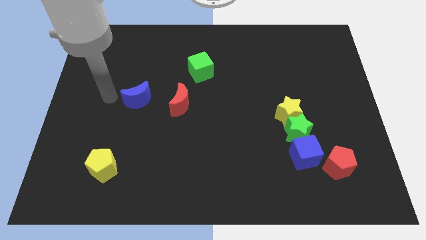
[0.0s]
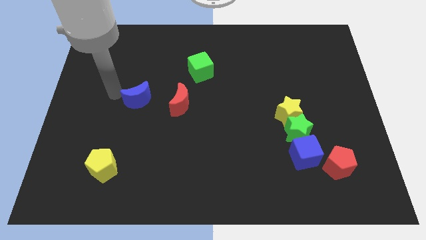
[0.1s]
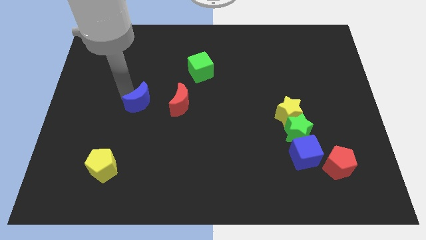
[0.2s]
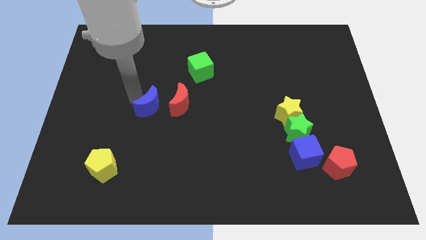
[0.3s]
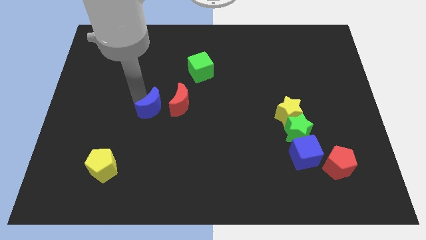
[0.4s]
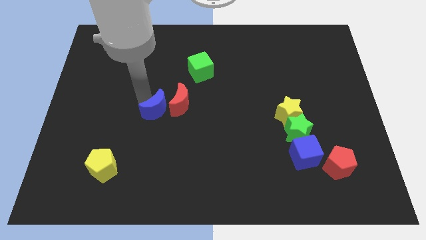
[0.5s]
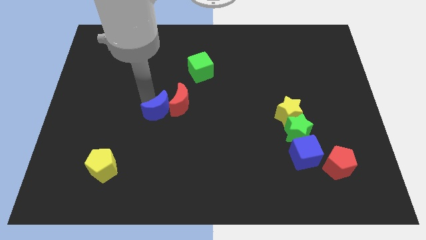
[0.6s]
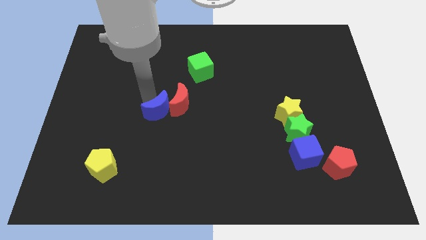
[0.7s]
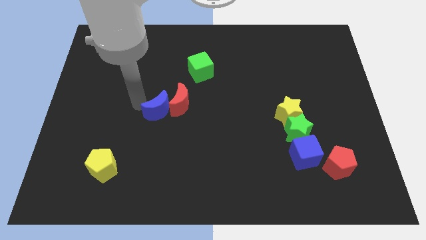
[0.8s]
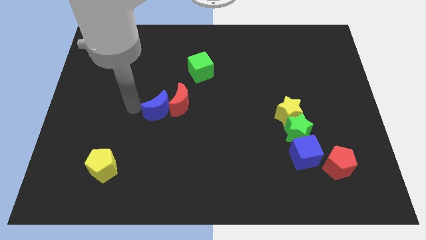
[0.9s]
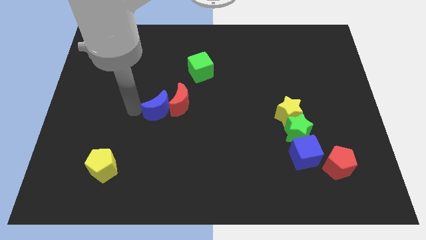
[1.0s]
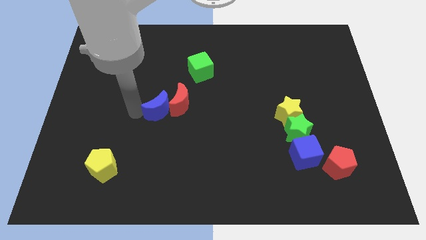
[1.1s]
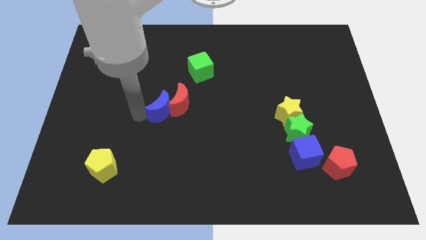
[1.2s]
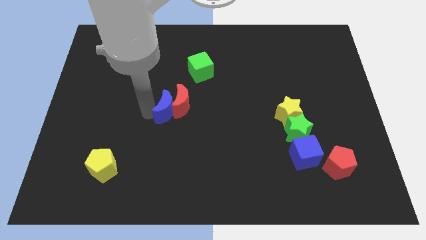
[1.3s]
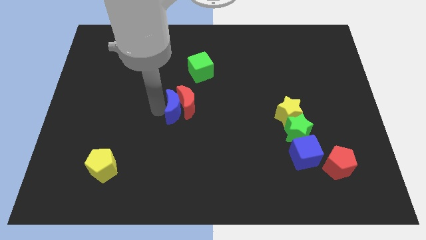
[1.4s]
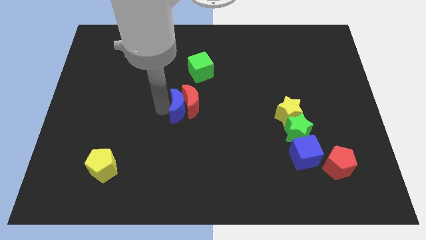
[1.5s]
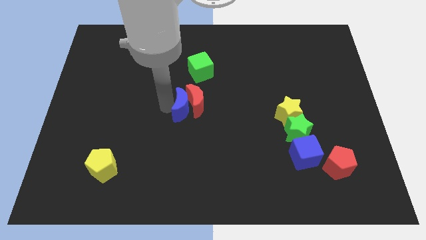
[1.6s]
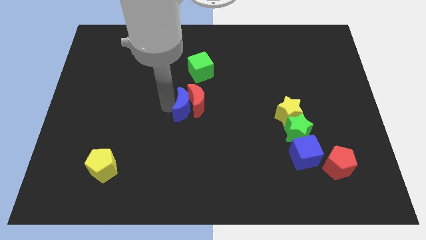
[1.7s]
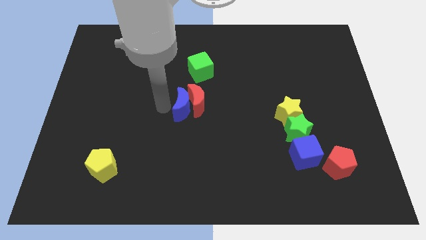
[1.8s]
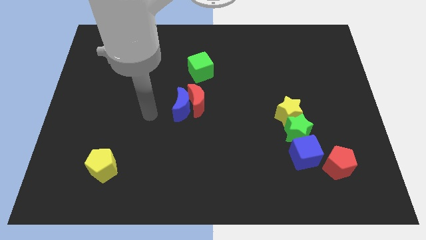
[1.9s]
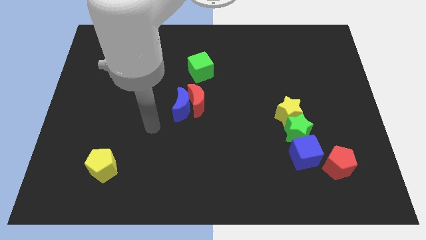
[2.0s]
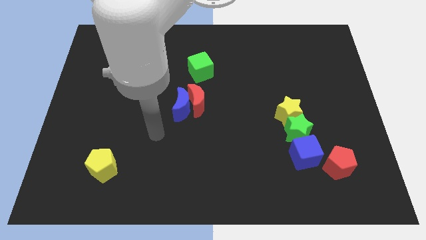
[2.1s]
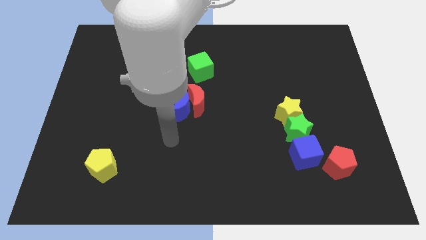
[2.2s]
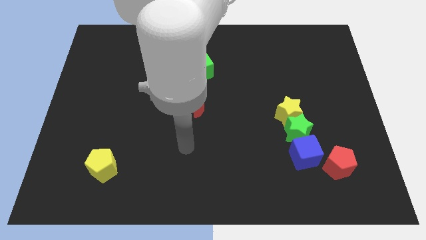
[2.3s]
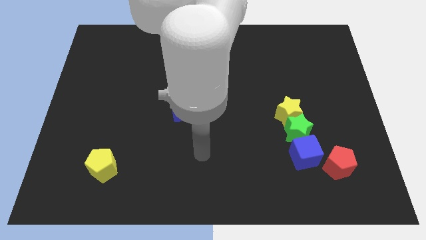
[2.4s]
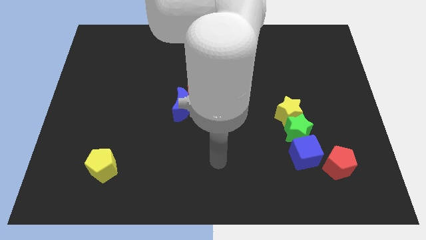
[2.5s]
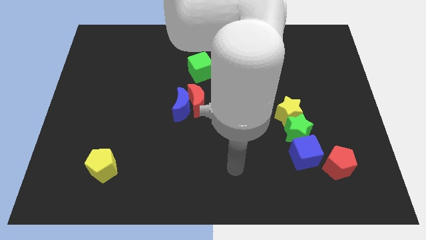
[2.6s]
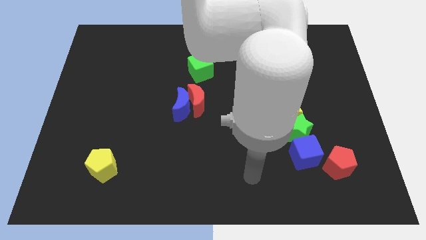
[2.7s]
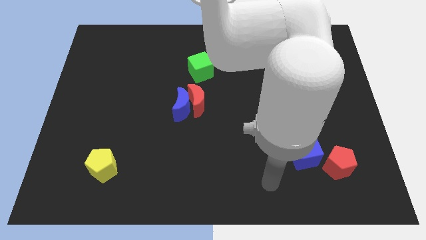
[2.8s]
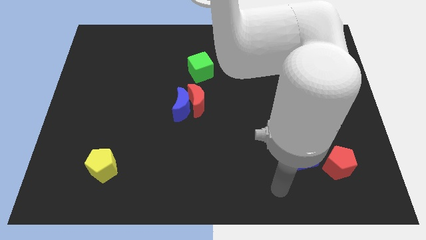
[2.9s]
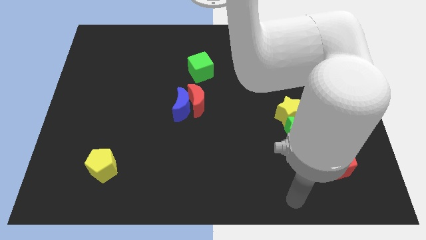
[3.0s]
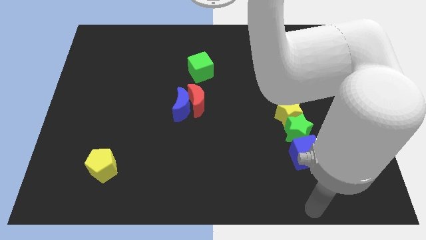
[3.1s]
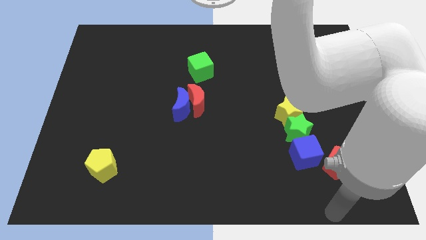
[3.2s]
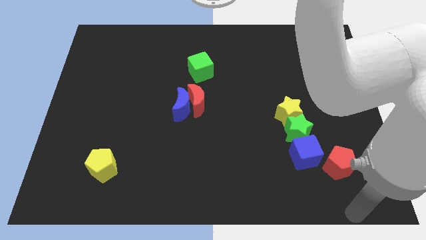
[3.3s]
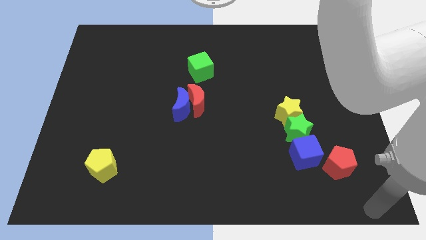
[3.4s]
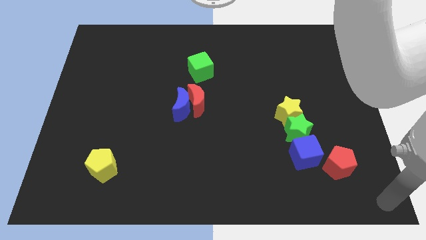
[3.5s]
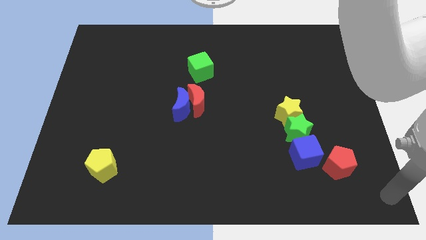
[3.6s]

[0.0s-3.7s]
move the red crescent with the blue crescent towards right

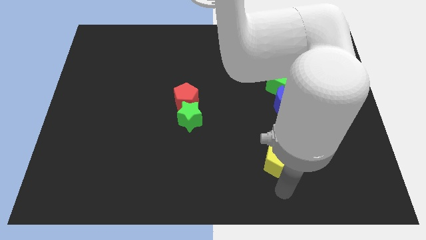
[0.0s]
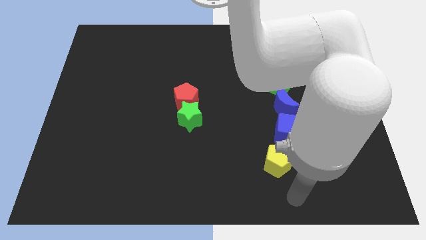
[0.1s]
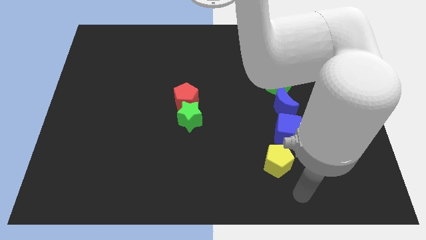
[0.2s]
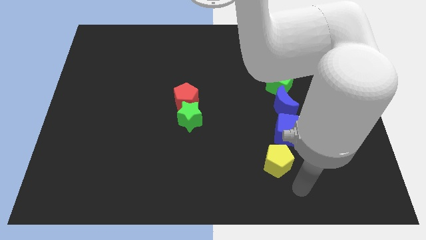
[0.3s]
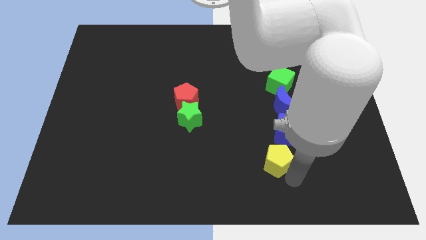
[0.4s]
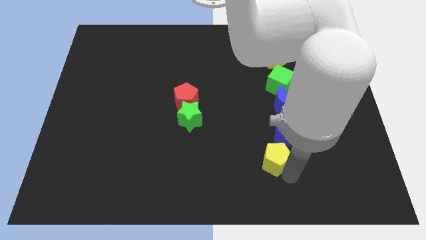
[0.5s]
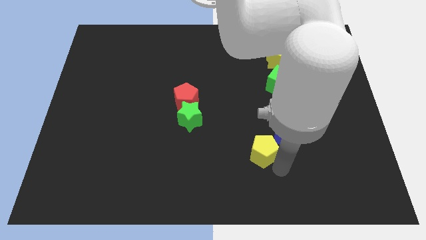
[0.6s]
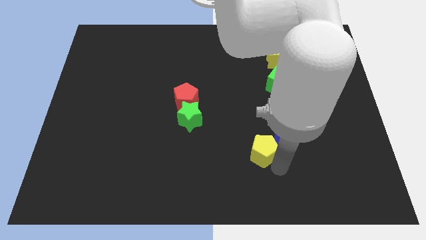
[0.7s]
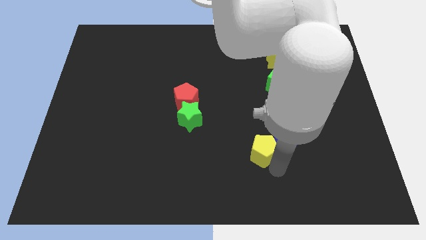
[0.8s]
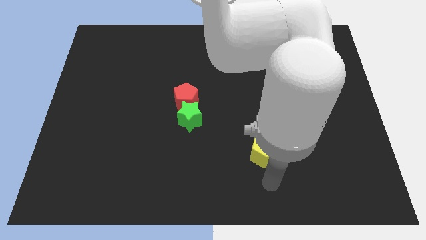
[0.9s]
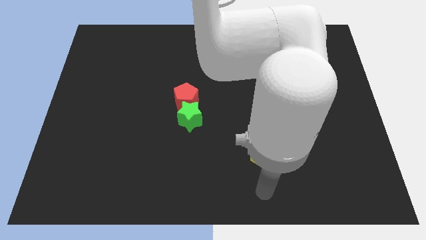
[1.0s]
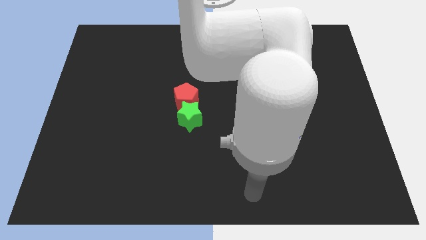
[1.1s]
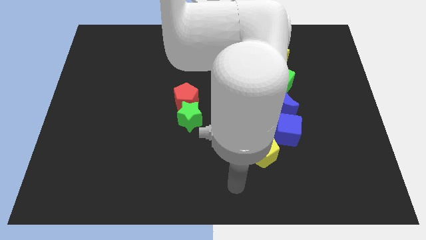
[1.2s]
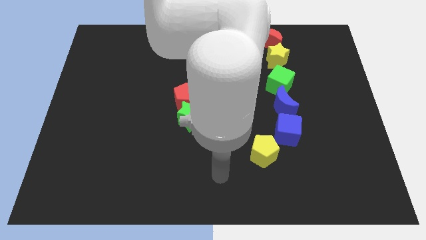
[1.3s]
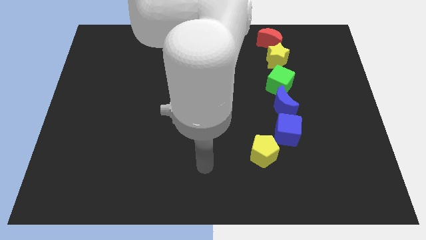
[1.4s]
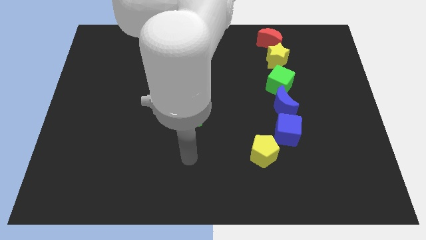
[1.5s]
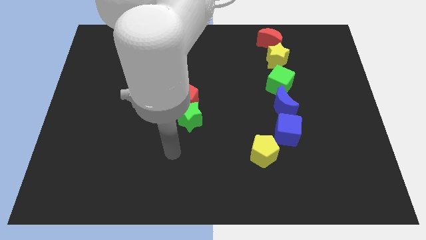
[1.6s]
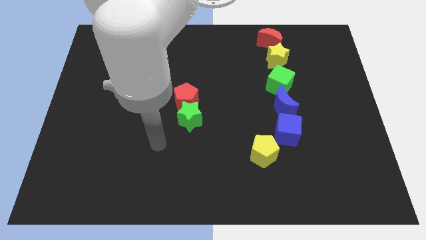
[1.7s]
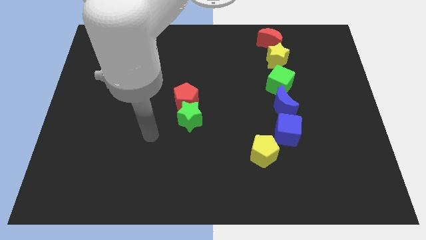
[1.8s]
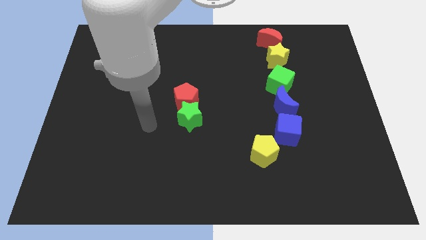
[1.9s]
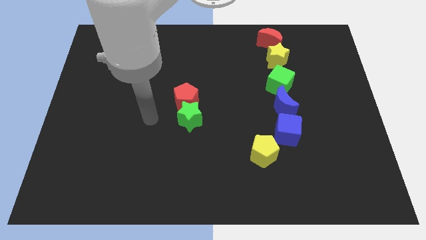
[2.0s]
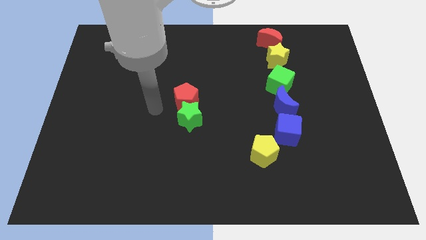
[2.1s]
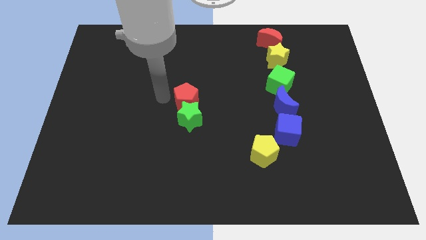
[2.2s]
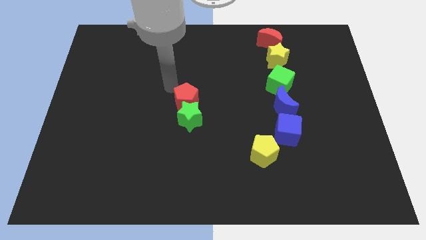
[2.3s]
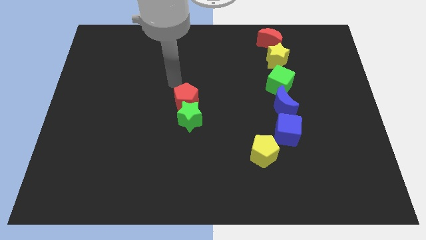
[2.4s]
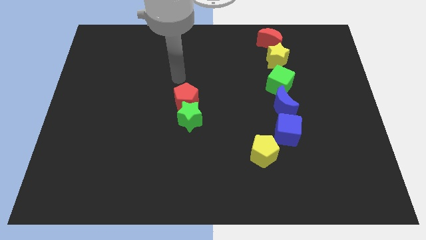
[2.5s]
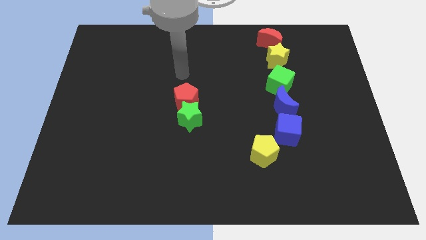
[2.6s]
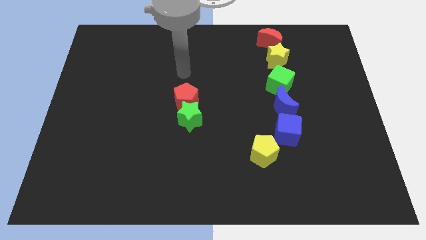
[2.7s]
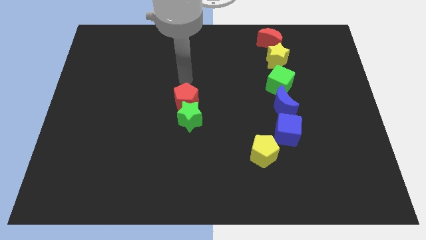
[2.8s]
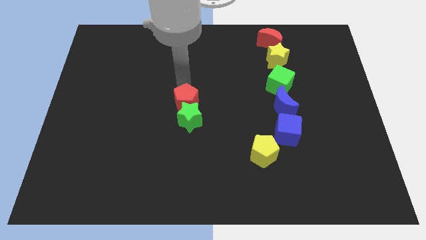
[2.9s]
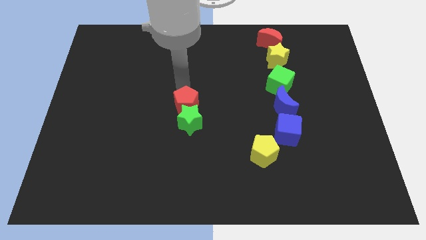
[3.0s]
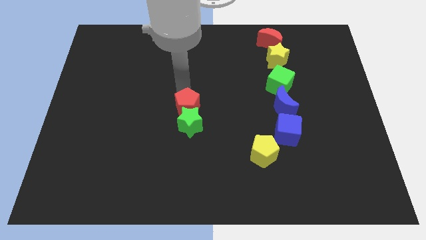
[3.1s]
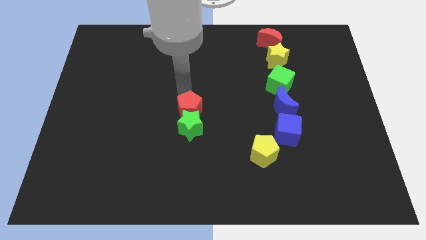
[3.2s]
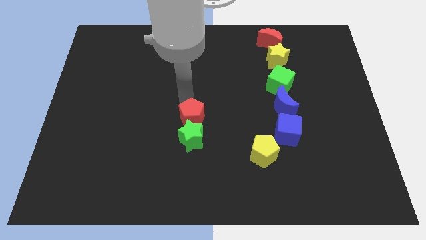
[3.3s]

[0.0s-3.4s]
move the red pentagon along with the green star slightly downwards

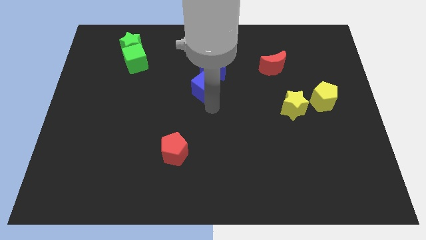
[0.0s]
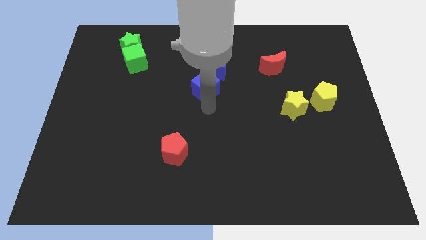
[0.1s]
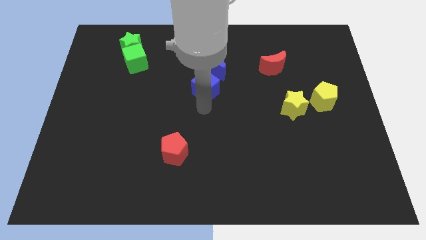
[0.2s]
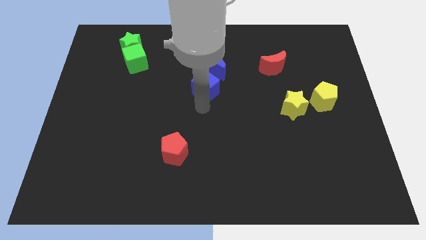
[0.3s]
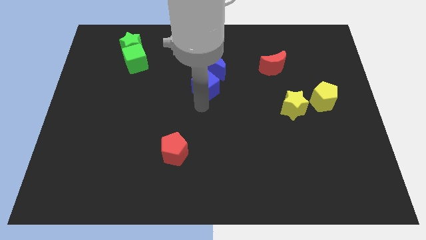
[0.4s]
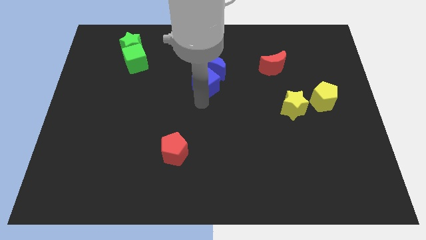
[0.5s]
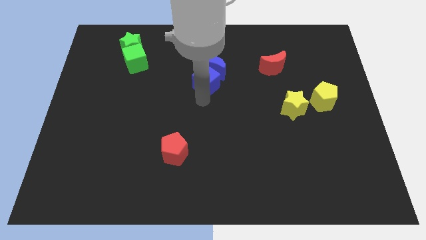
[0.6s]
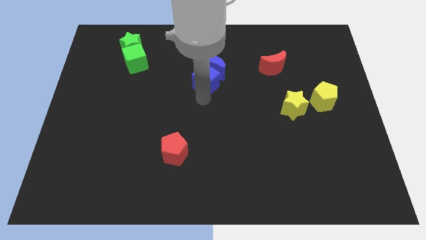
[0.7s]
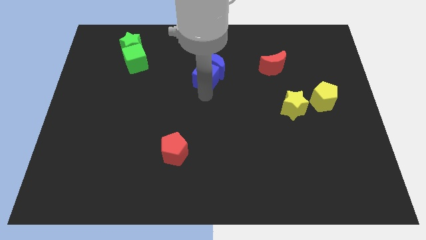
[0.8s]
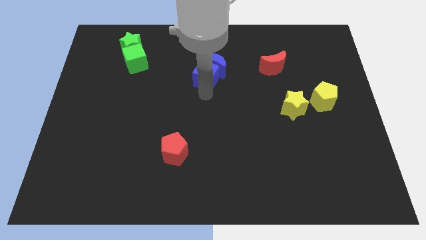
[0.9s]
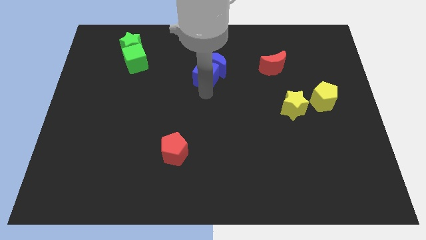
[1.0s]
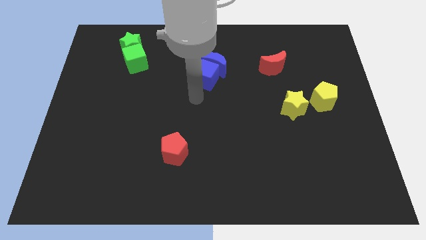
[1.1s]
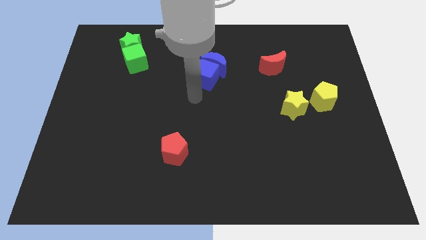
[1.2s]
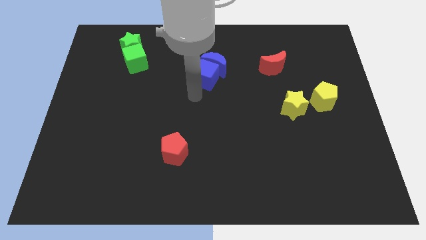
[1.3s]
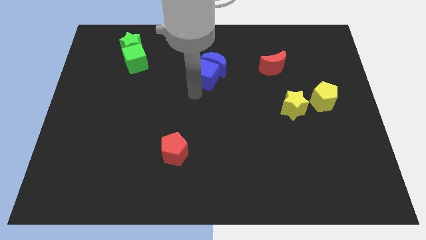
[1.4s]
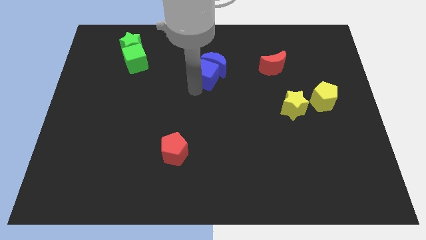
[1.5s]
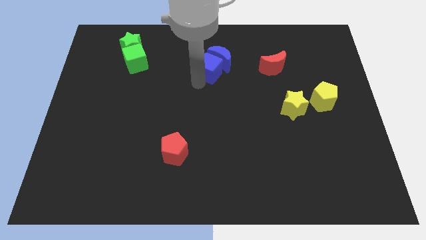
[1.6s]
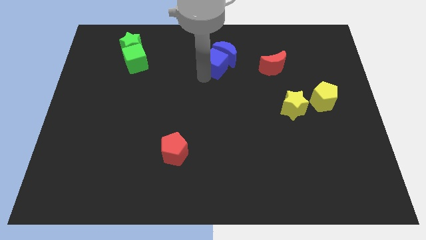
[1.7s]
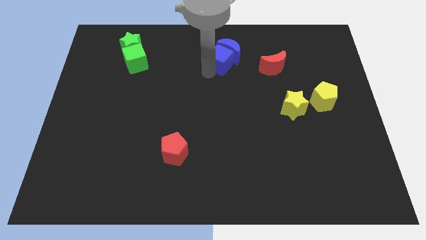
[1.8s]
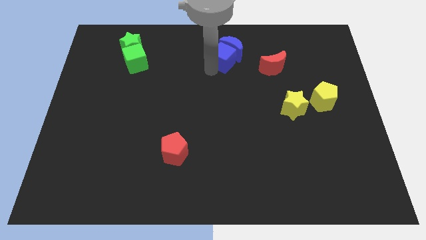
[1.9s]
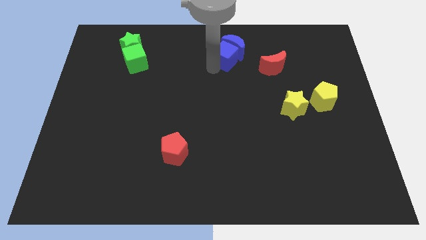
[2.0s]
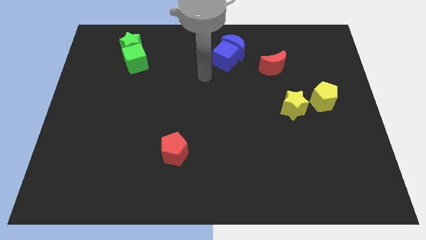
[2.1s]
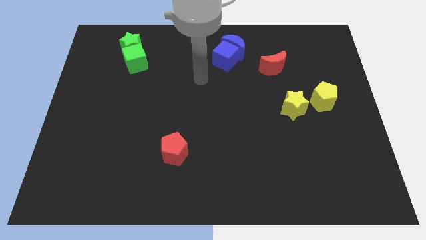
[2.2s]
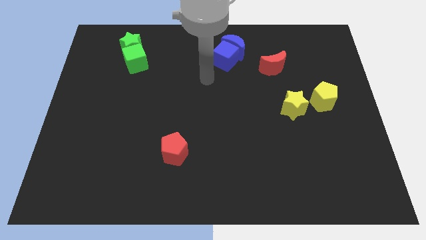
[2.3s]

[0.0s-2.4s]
push blue blocks slightly towards up
